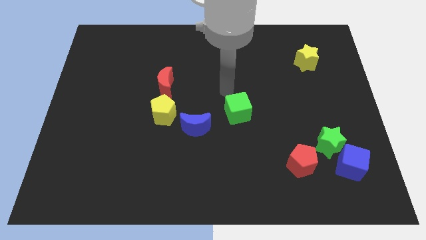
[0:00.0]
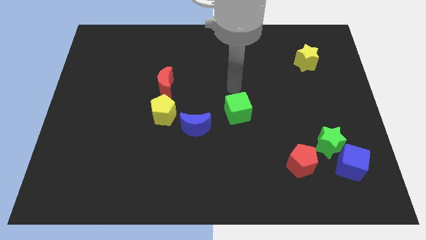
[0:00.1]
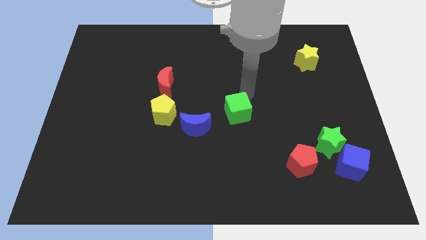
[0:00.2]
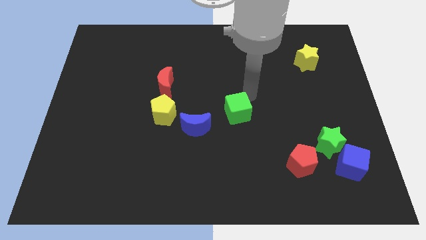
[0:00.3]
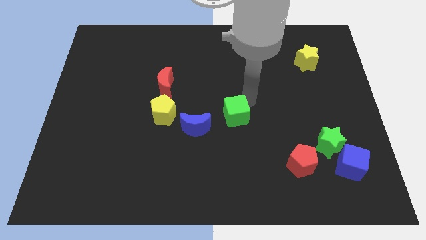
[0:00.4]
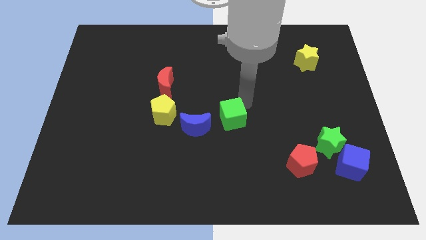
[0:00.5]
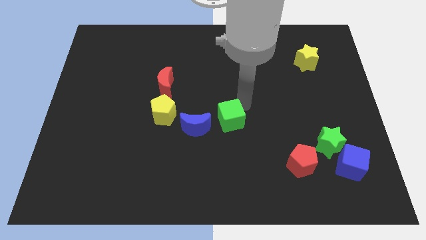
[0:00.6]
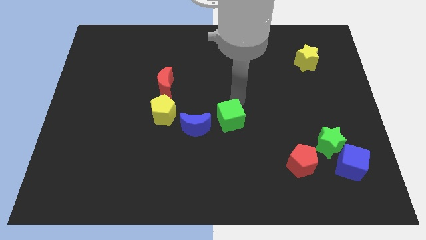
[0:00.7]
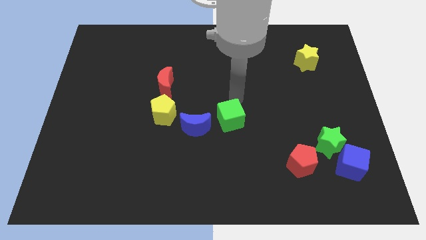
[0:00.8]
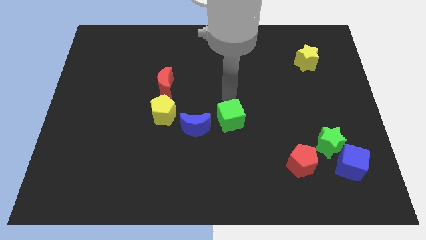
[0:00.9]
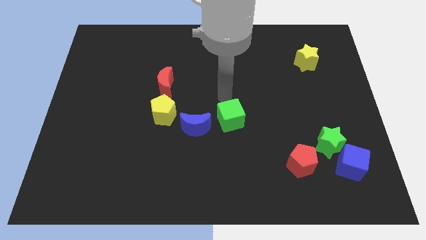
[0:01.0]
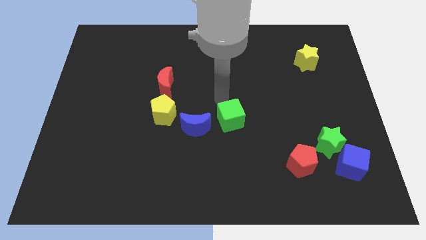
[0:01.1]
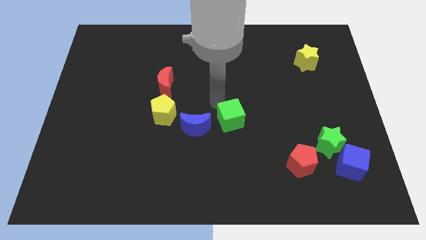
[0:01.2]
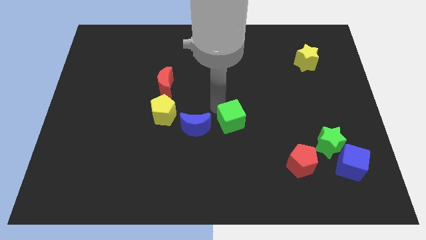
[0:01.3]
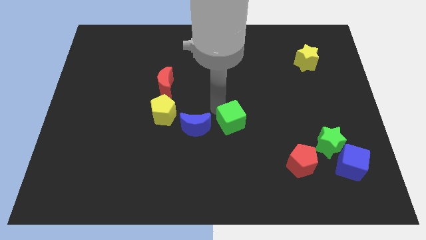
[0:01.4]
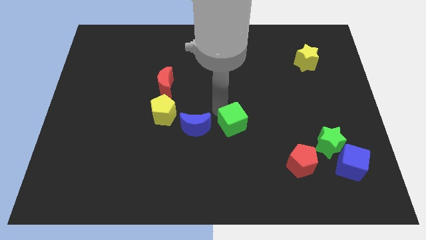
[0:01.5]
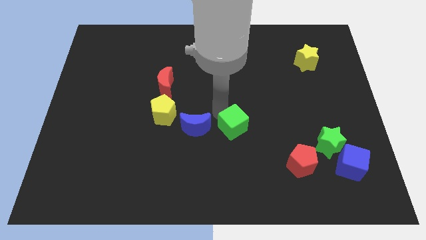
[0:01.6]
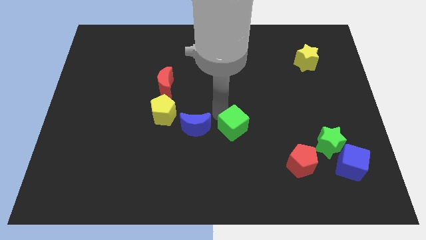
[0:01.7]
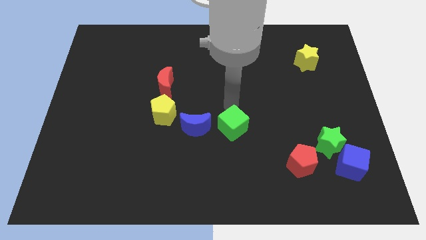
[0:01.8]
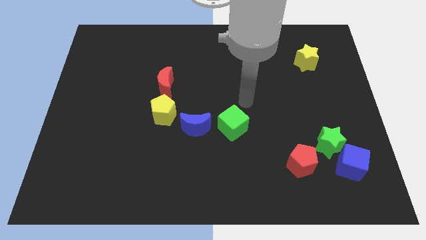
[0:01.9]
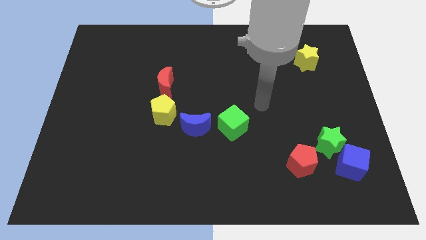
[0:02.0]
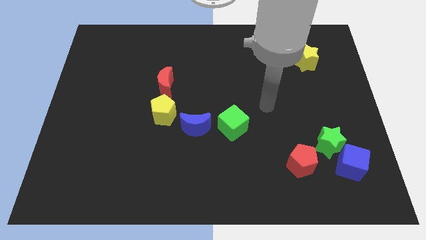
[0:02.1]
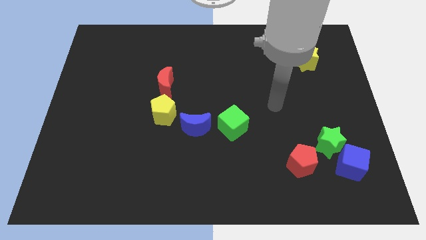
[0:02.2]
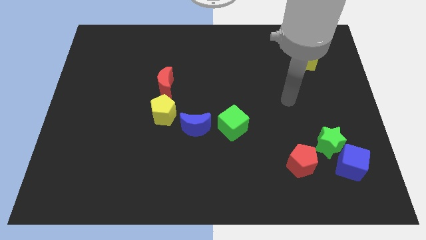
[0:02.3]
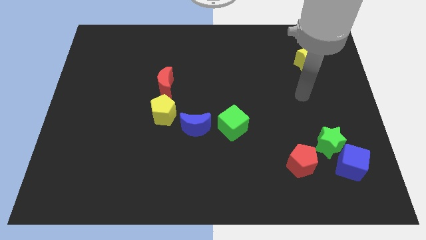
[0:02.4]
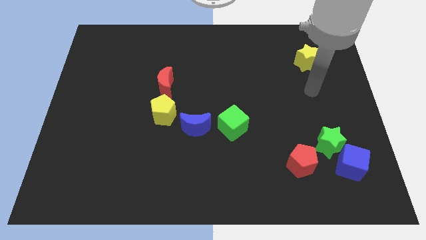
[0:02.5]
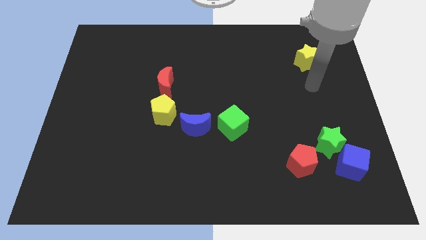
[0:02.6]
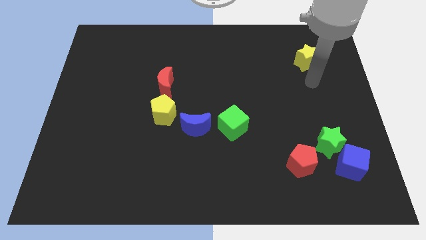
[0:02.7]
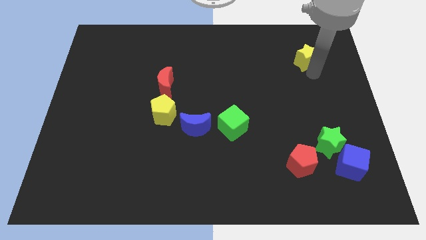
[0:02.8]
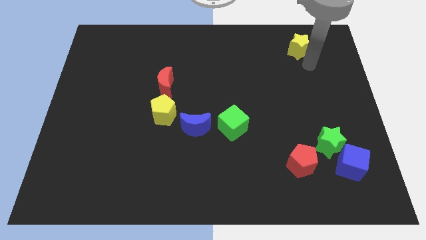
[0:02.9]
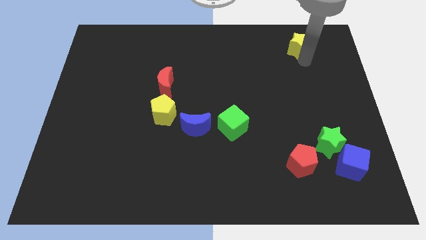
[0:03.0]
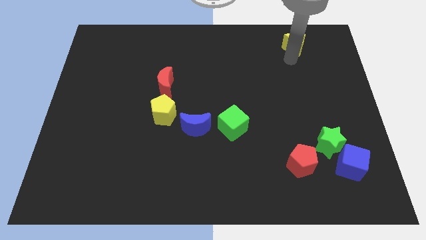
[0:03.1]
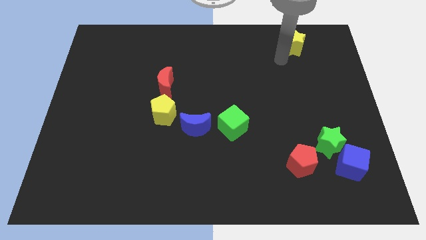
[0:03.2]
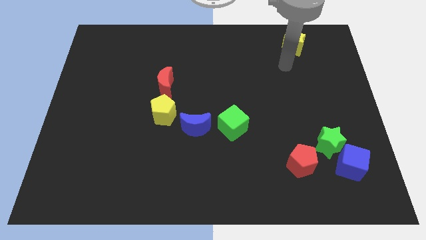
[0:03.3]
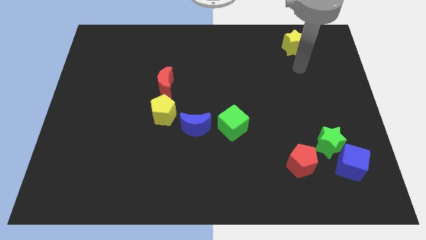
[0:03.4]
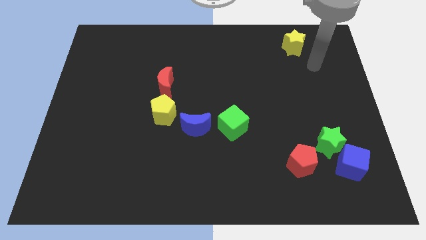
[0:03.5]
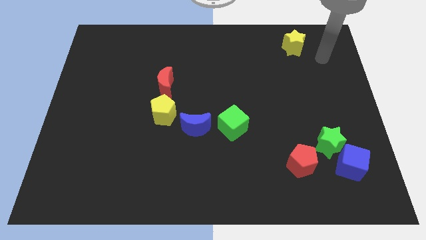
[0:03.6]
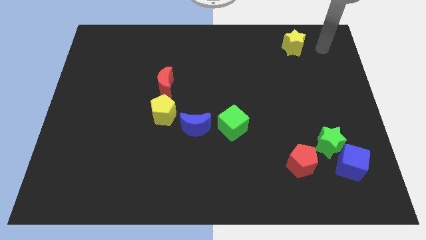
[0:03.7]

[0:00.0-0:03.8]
place green cube beside blue moon

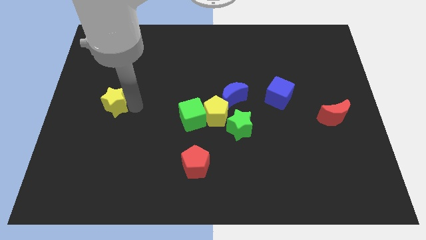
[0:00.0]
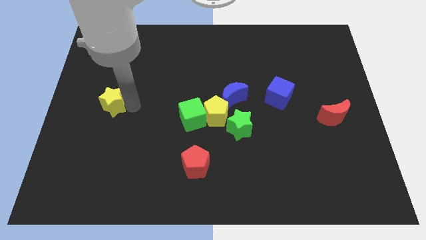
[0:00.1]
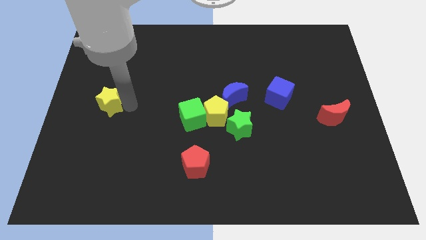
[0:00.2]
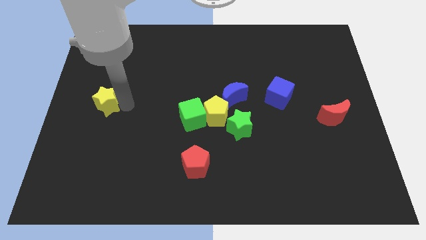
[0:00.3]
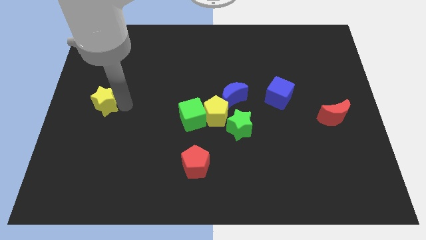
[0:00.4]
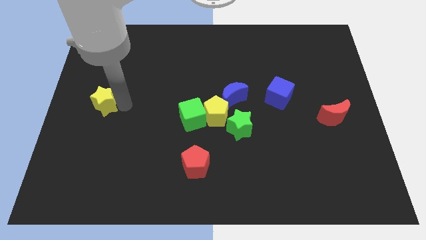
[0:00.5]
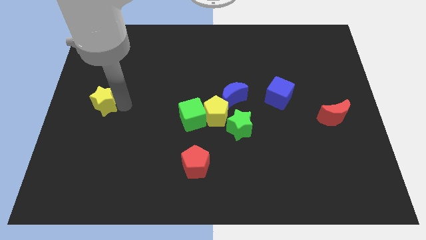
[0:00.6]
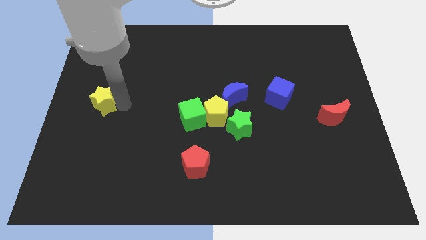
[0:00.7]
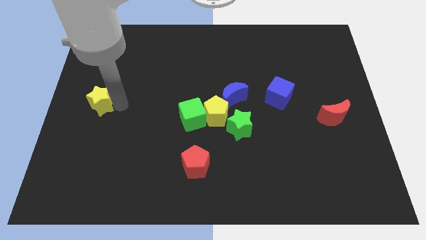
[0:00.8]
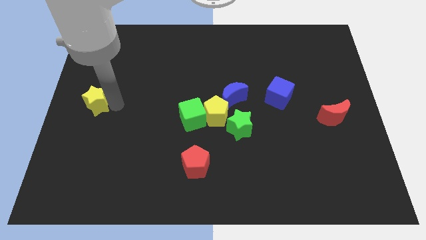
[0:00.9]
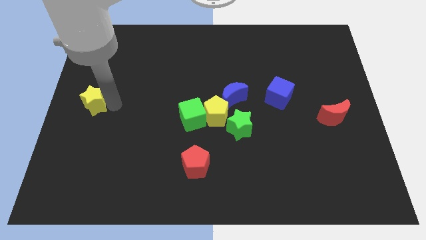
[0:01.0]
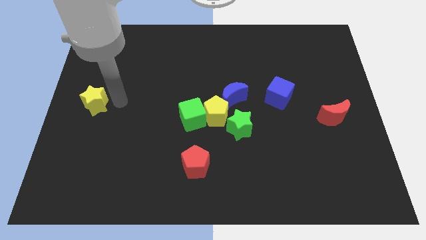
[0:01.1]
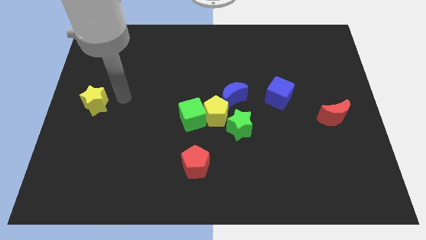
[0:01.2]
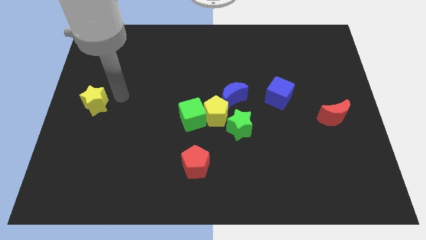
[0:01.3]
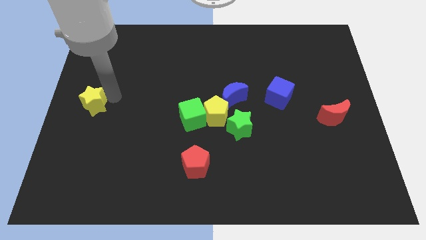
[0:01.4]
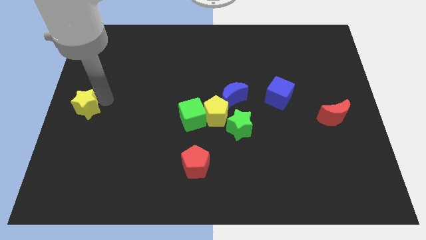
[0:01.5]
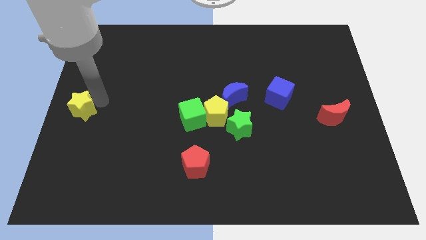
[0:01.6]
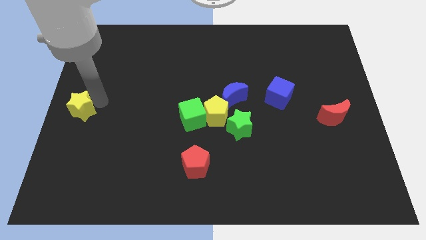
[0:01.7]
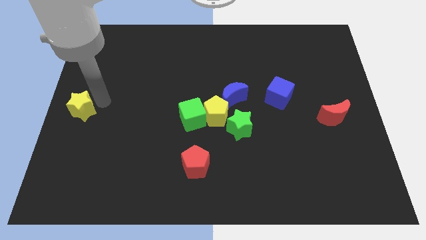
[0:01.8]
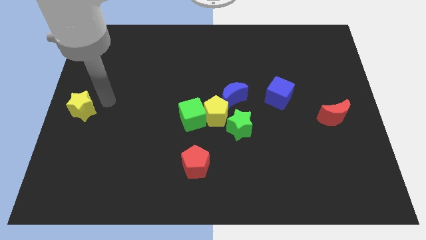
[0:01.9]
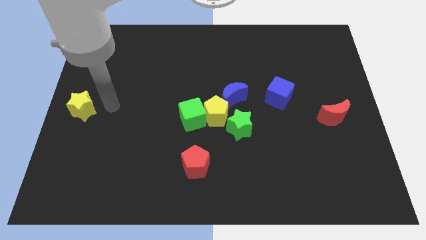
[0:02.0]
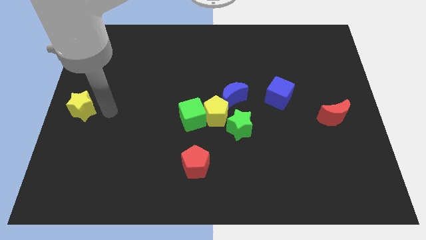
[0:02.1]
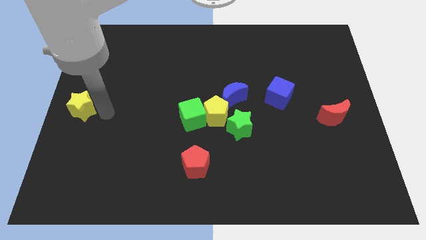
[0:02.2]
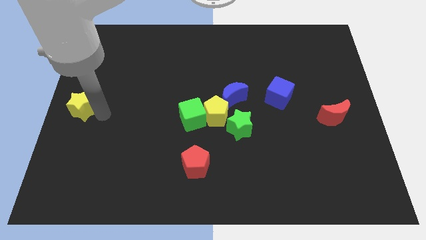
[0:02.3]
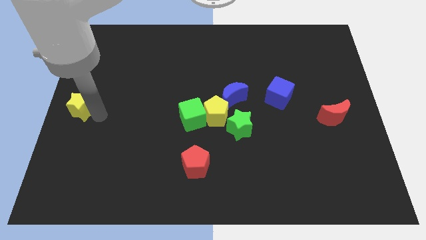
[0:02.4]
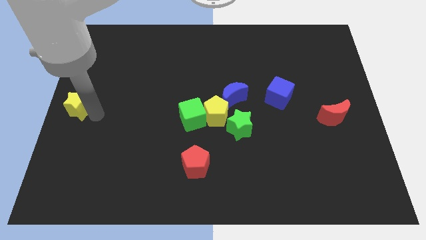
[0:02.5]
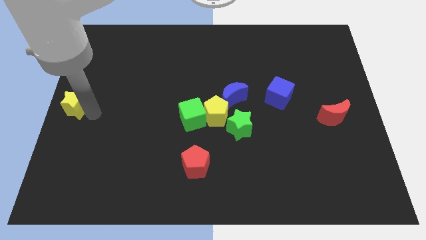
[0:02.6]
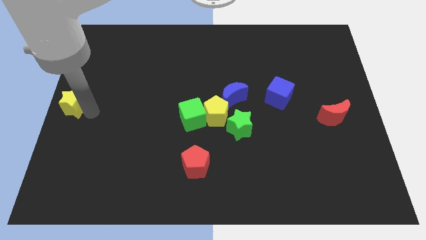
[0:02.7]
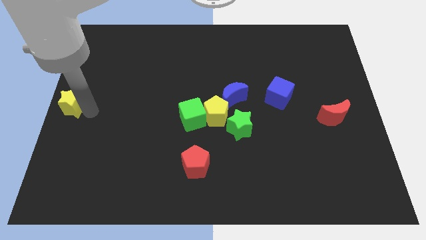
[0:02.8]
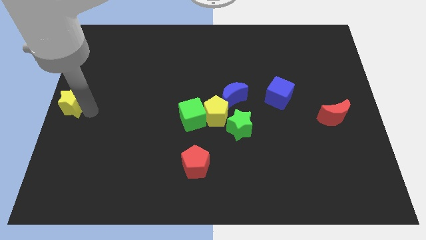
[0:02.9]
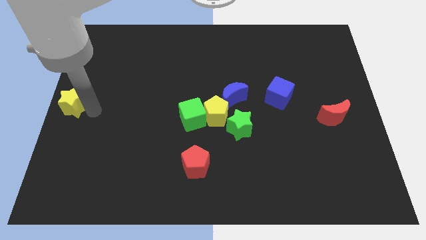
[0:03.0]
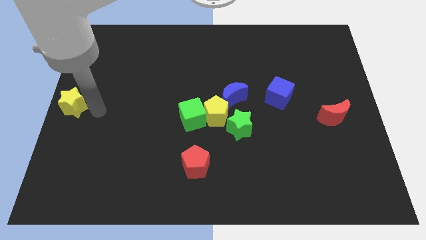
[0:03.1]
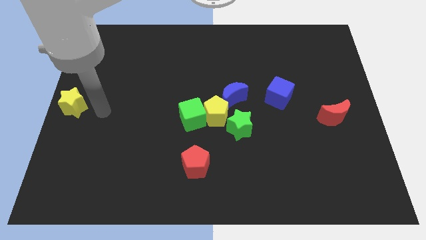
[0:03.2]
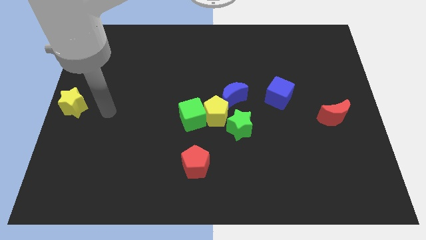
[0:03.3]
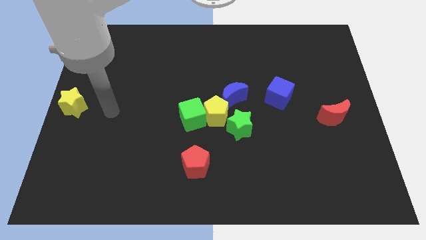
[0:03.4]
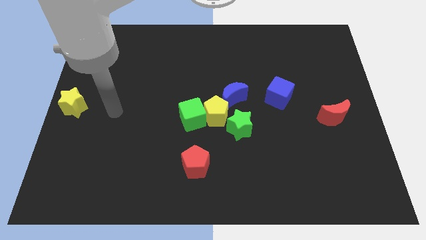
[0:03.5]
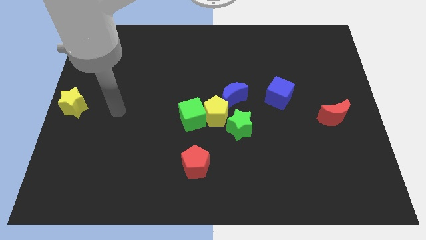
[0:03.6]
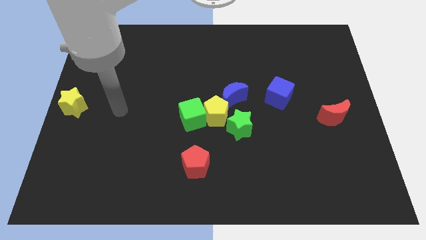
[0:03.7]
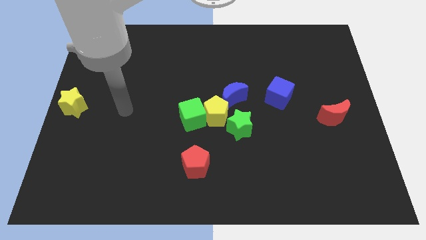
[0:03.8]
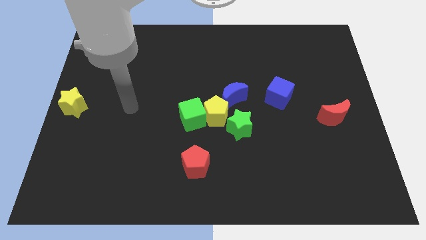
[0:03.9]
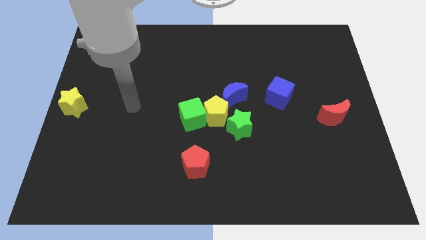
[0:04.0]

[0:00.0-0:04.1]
place the yellow star at the left center of the board

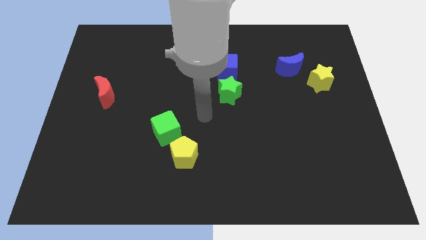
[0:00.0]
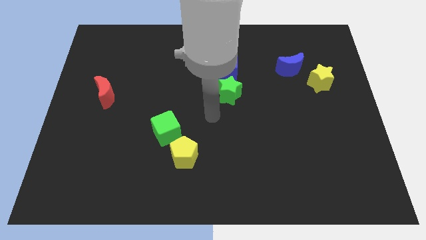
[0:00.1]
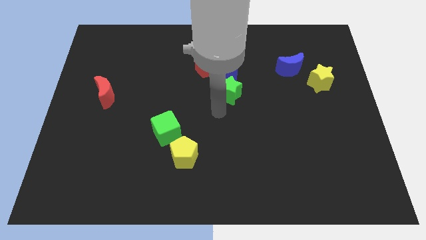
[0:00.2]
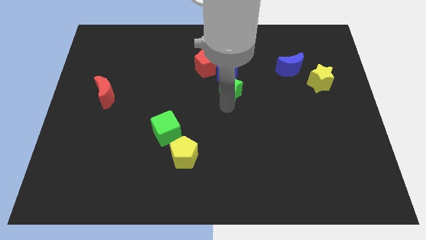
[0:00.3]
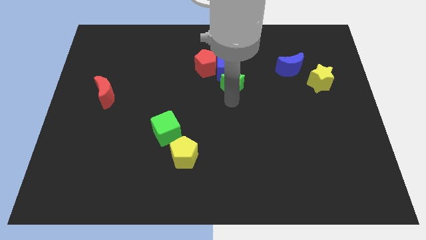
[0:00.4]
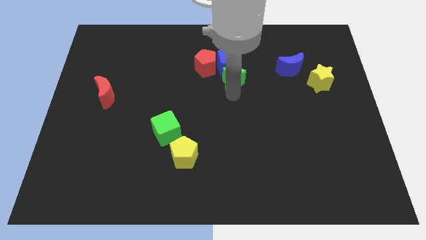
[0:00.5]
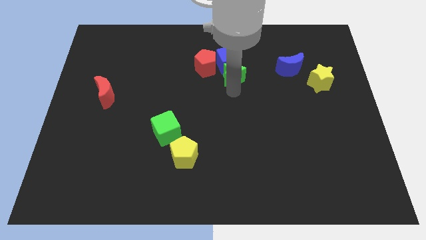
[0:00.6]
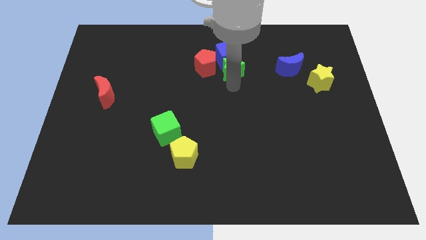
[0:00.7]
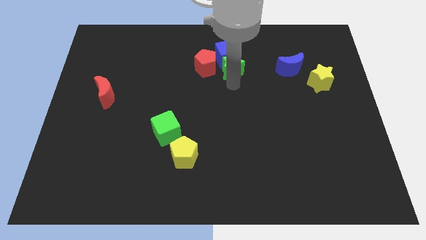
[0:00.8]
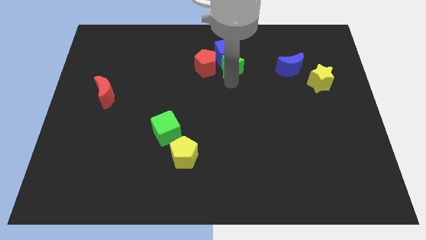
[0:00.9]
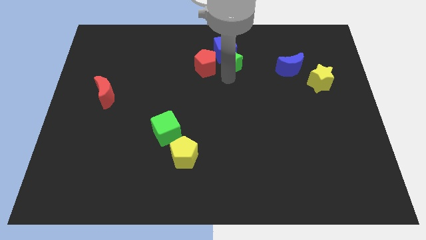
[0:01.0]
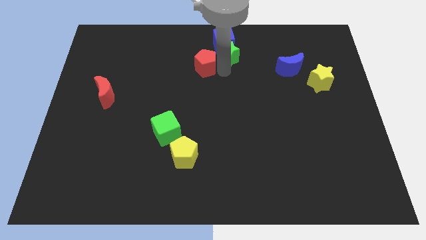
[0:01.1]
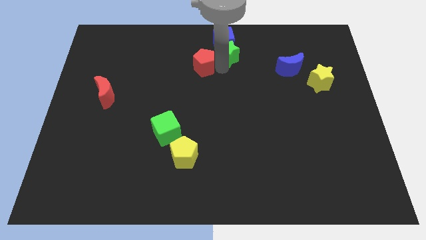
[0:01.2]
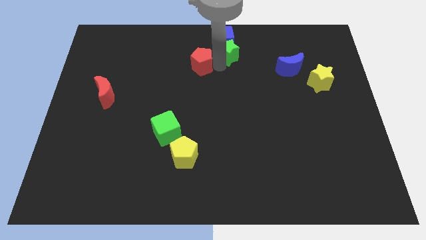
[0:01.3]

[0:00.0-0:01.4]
place the green star and the blue cube at the top center of the board
